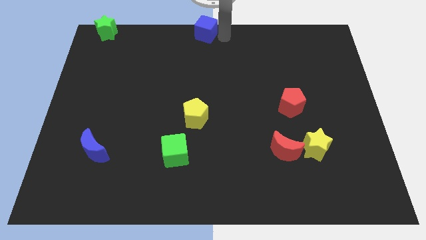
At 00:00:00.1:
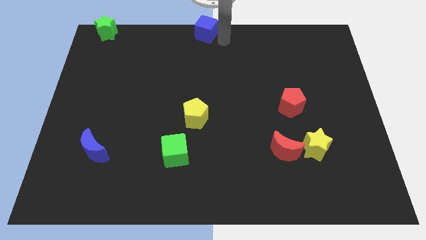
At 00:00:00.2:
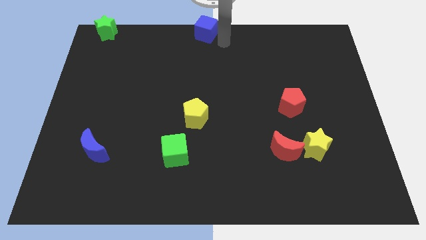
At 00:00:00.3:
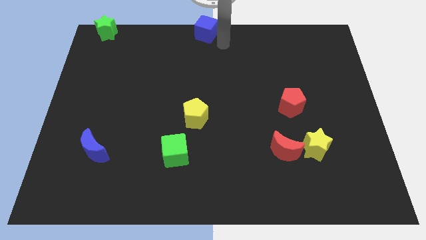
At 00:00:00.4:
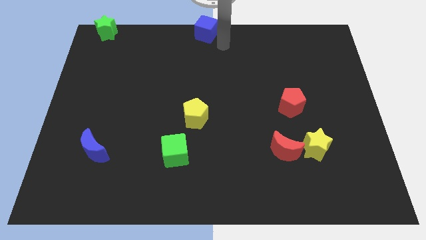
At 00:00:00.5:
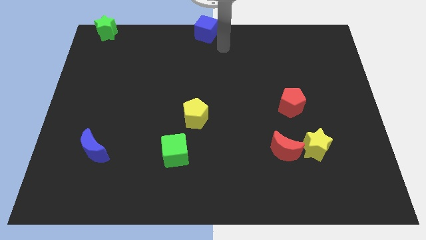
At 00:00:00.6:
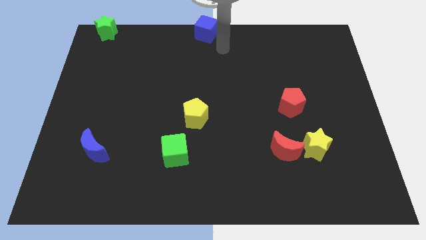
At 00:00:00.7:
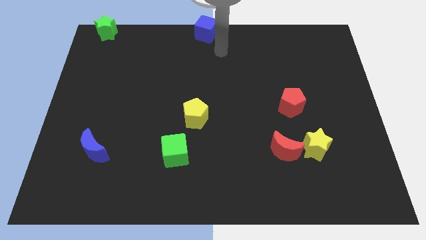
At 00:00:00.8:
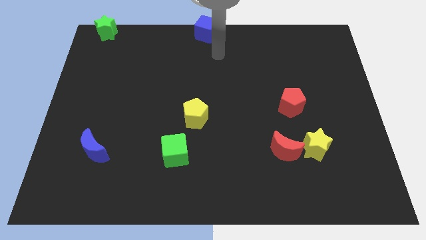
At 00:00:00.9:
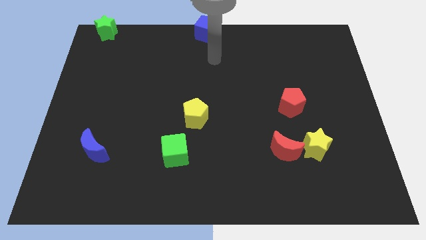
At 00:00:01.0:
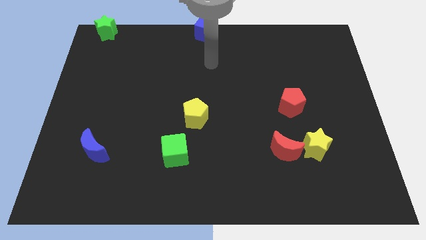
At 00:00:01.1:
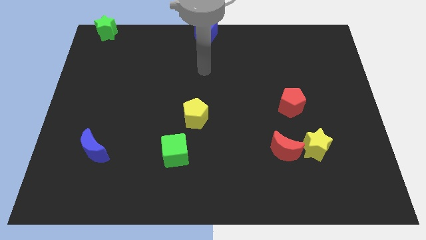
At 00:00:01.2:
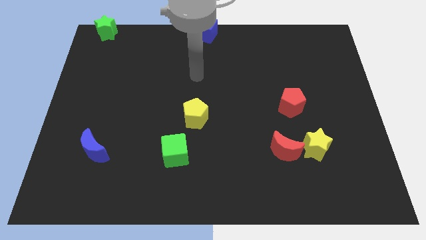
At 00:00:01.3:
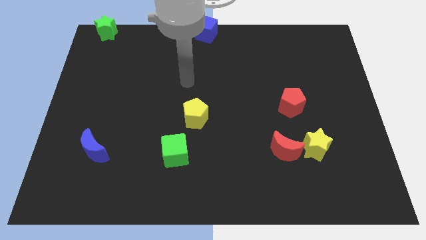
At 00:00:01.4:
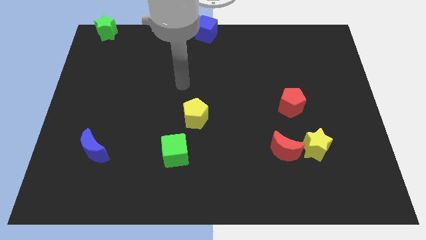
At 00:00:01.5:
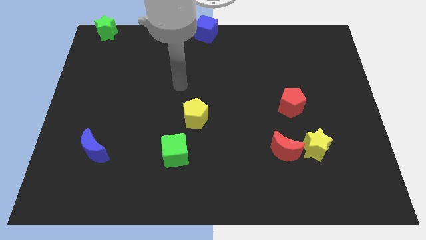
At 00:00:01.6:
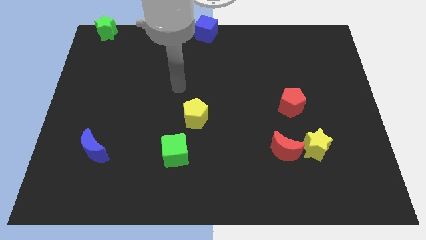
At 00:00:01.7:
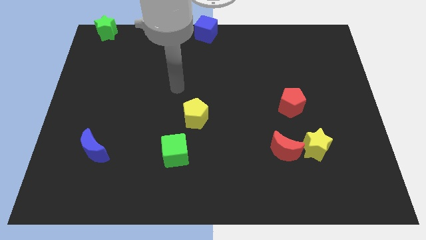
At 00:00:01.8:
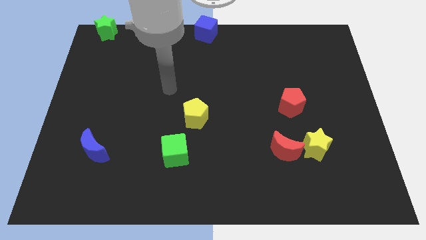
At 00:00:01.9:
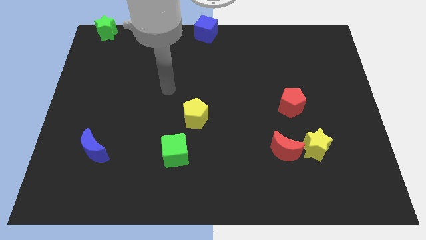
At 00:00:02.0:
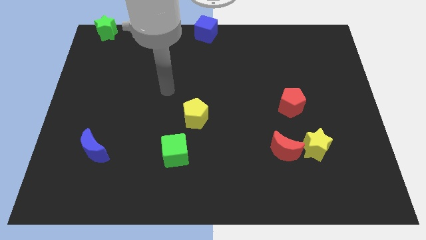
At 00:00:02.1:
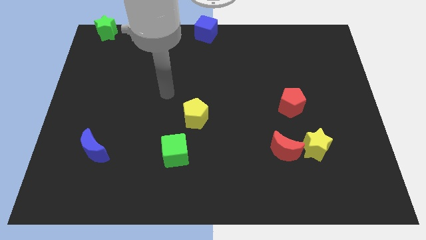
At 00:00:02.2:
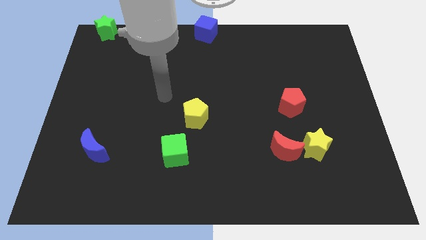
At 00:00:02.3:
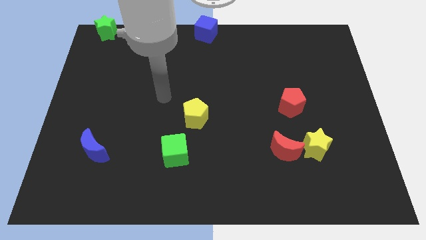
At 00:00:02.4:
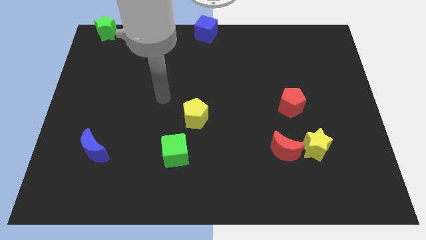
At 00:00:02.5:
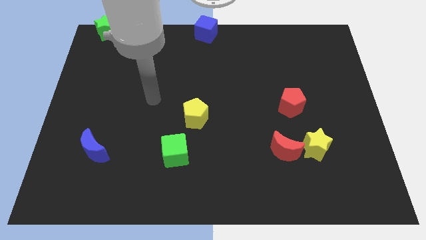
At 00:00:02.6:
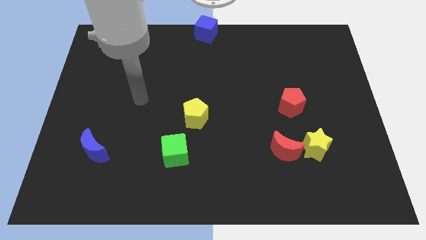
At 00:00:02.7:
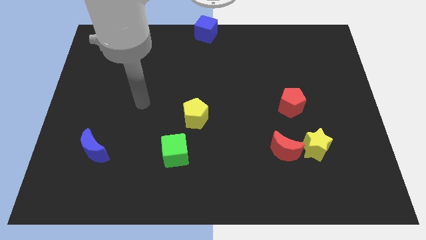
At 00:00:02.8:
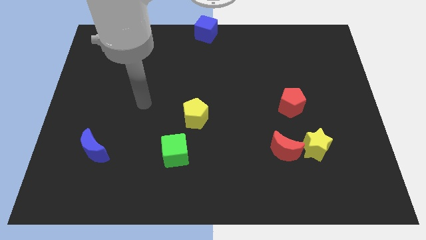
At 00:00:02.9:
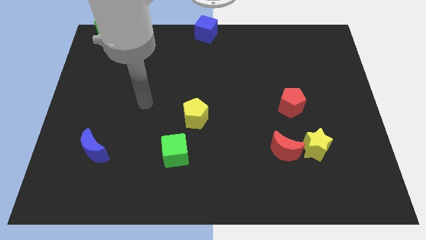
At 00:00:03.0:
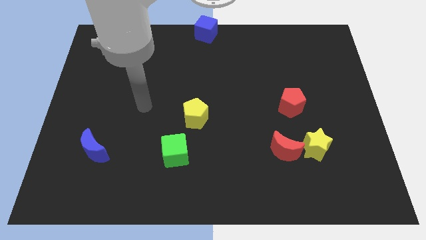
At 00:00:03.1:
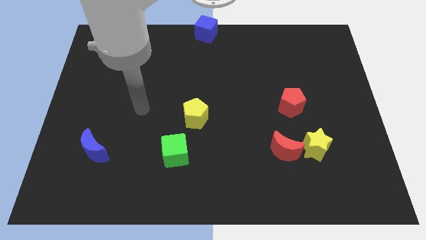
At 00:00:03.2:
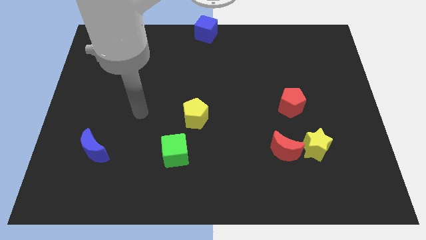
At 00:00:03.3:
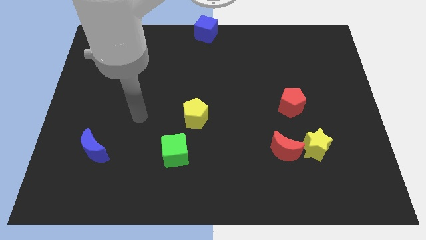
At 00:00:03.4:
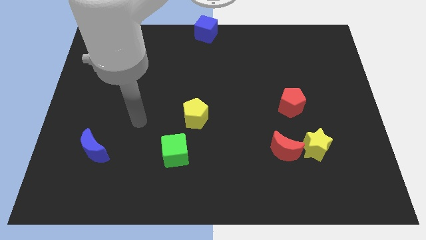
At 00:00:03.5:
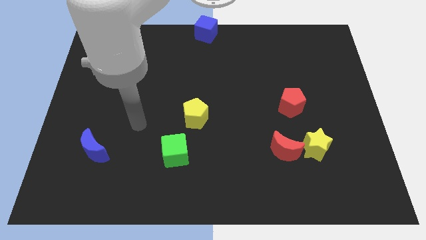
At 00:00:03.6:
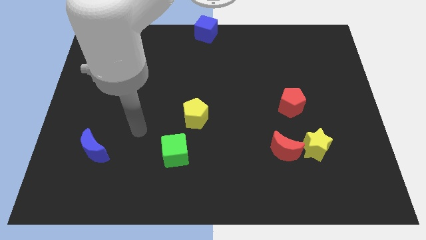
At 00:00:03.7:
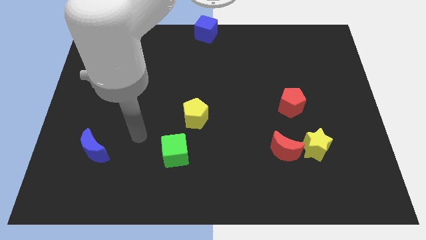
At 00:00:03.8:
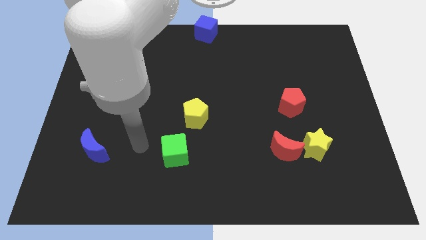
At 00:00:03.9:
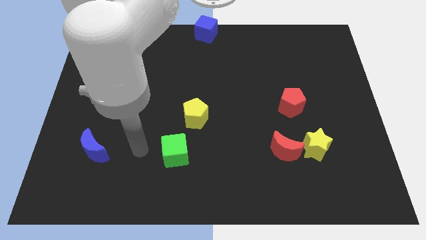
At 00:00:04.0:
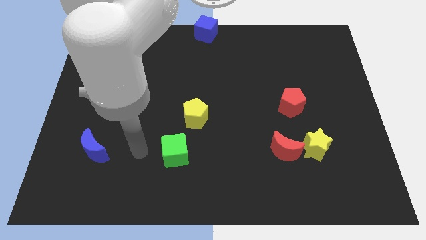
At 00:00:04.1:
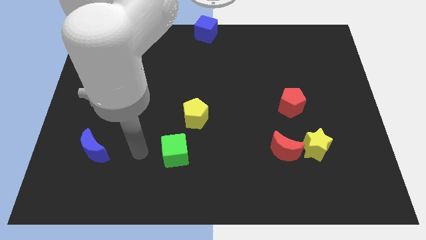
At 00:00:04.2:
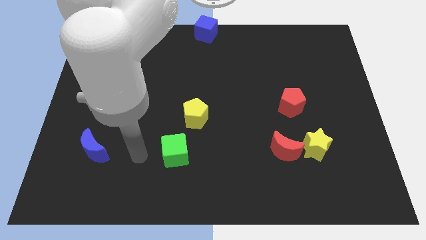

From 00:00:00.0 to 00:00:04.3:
point the arm in between the blue crescent and the green cube

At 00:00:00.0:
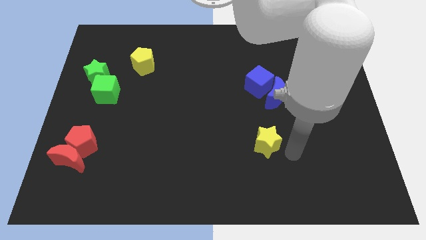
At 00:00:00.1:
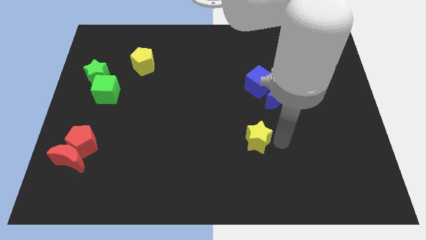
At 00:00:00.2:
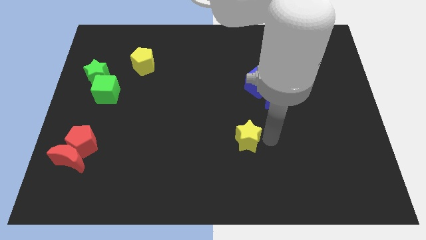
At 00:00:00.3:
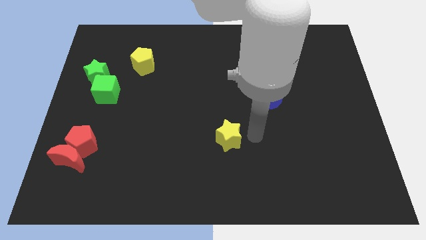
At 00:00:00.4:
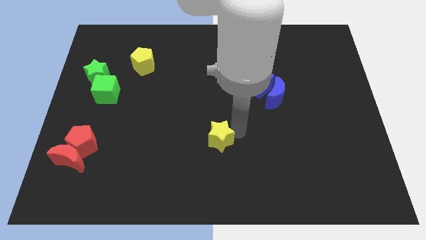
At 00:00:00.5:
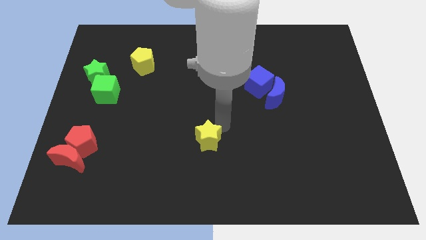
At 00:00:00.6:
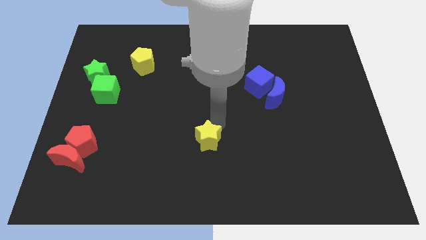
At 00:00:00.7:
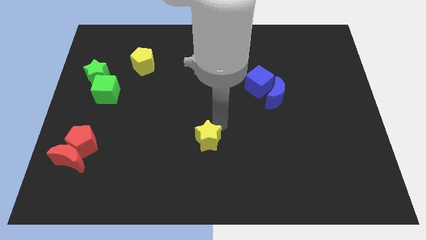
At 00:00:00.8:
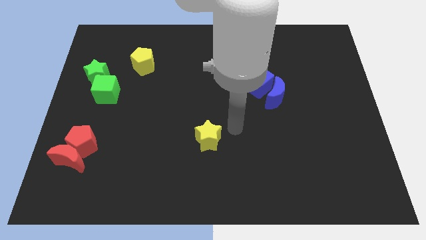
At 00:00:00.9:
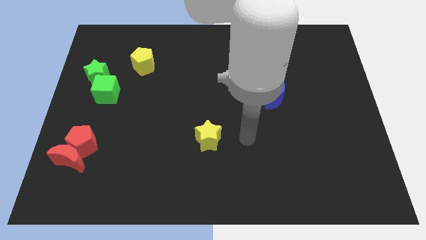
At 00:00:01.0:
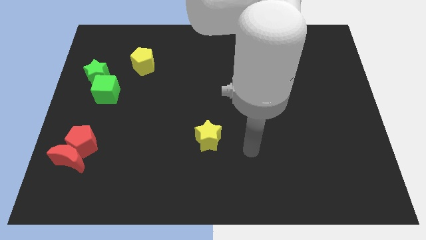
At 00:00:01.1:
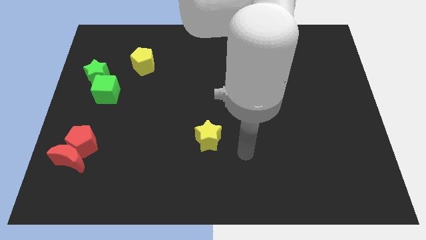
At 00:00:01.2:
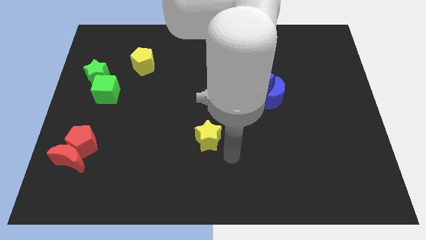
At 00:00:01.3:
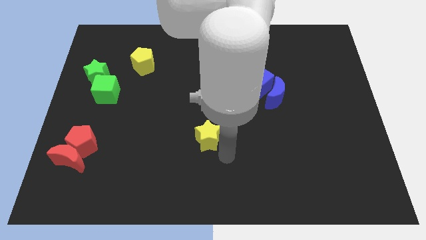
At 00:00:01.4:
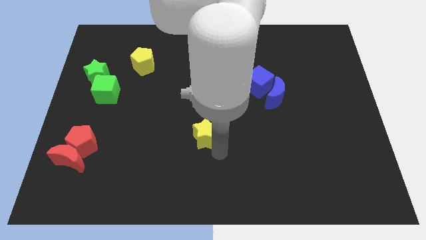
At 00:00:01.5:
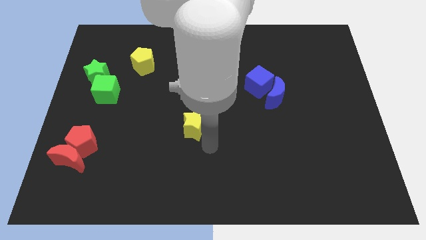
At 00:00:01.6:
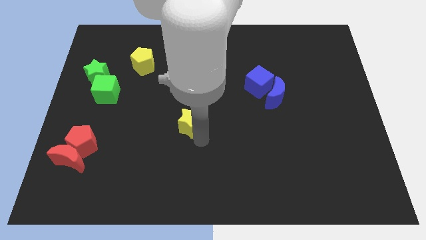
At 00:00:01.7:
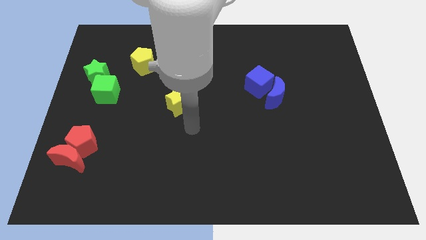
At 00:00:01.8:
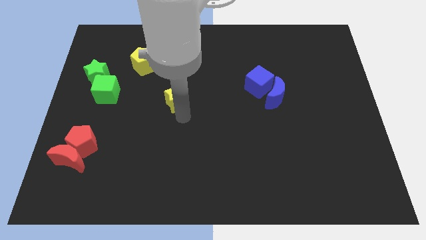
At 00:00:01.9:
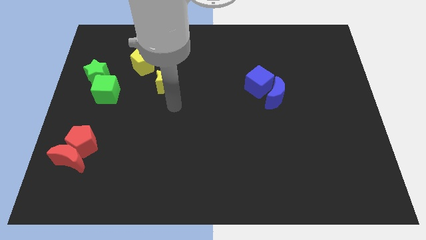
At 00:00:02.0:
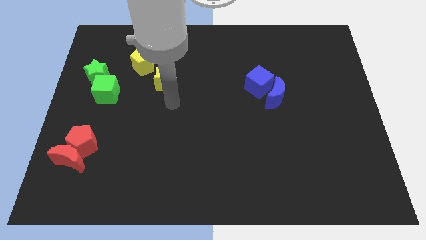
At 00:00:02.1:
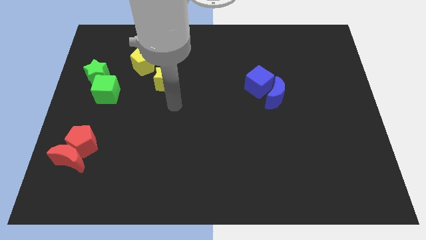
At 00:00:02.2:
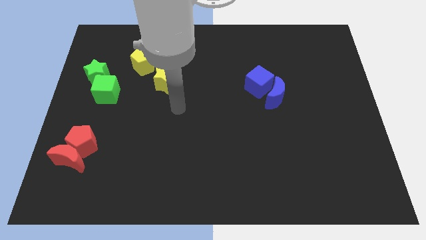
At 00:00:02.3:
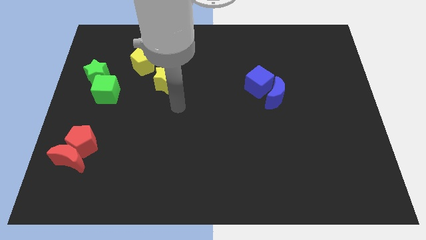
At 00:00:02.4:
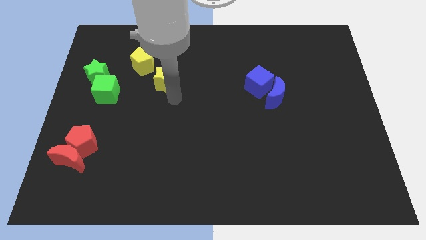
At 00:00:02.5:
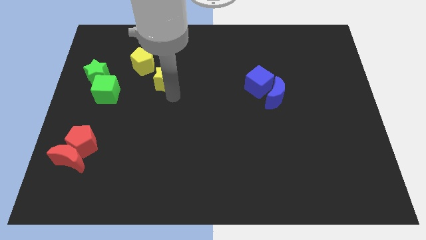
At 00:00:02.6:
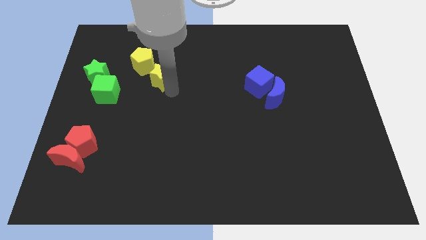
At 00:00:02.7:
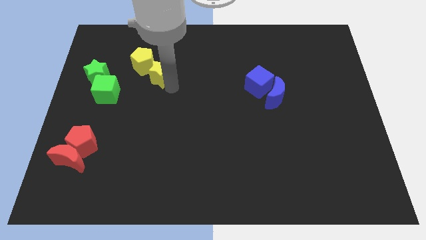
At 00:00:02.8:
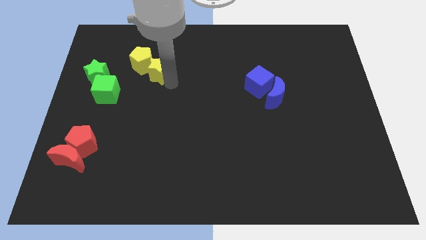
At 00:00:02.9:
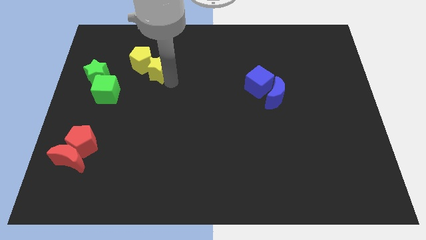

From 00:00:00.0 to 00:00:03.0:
move the yellow star below the yellow pentagon

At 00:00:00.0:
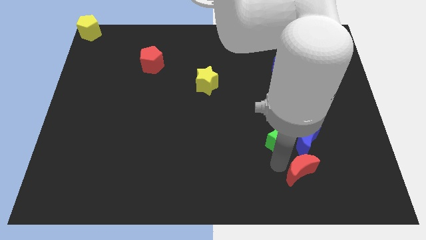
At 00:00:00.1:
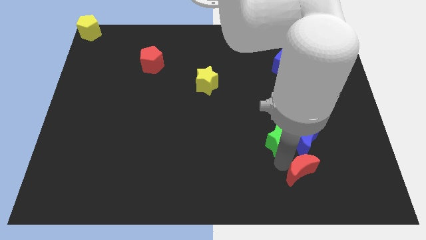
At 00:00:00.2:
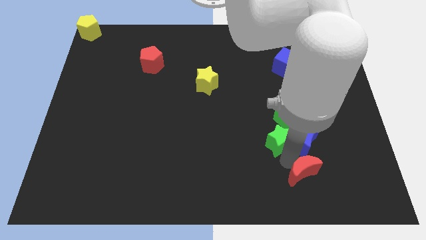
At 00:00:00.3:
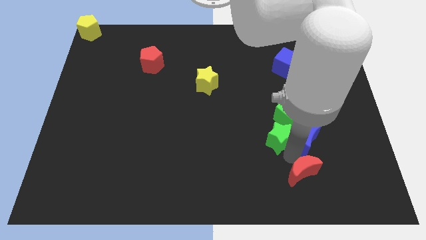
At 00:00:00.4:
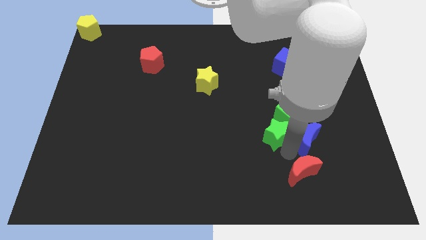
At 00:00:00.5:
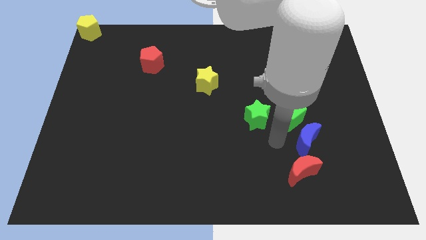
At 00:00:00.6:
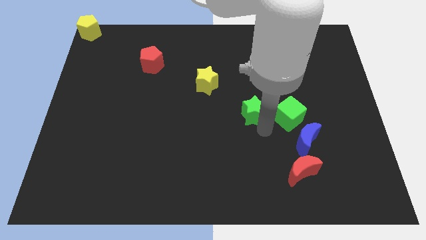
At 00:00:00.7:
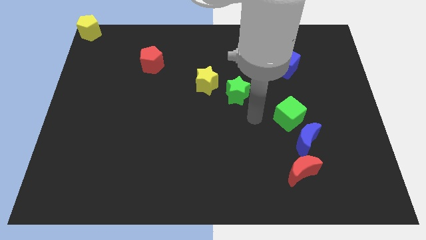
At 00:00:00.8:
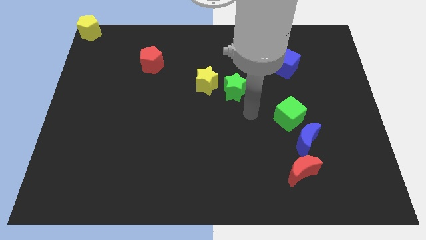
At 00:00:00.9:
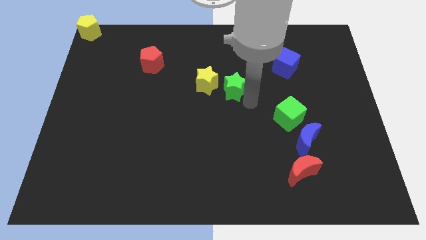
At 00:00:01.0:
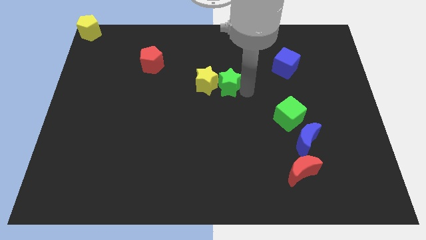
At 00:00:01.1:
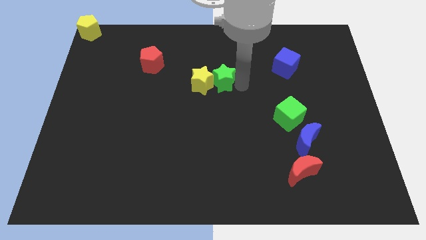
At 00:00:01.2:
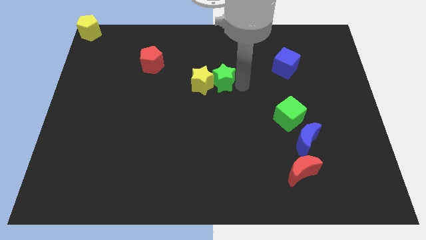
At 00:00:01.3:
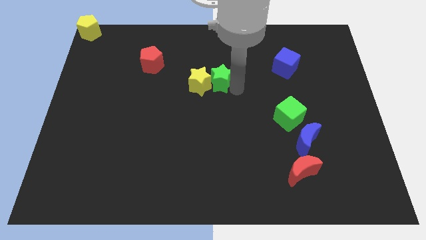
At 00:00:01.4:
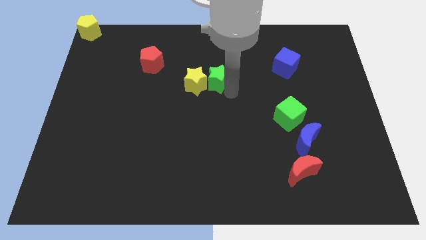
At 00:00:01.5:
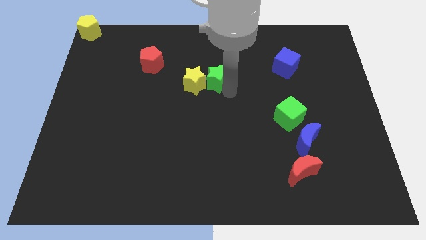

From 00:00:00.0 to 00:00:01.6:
push the green star into the yellow star
